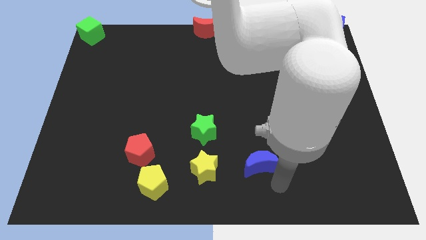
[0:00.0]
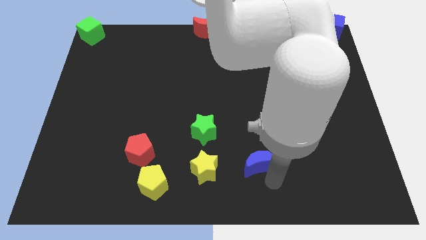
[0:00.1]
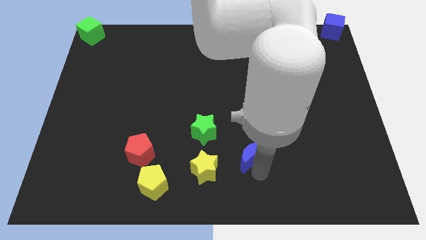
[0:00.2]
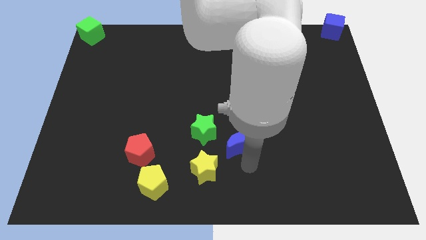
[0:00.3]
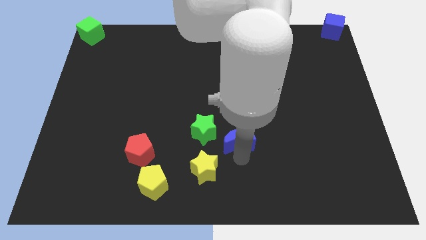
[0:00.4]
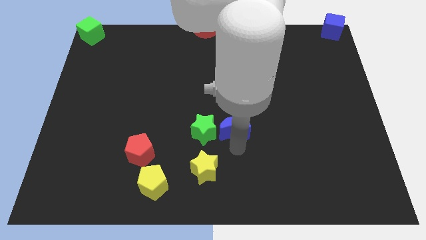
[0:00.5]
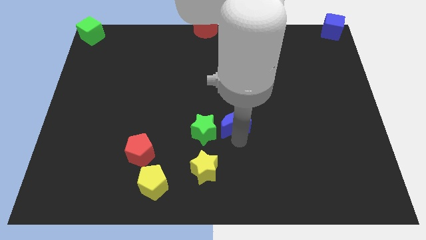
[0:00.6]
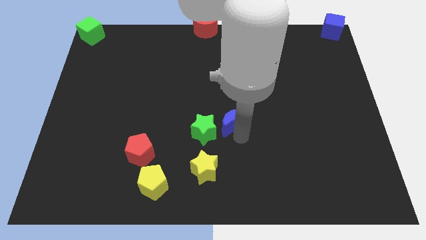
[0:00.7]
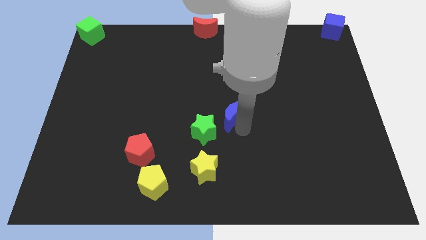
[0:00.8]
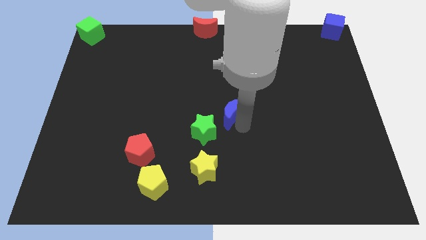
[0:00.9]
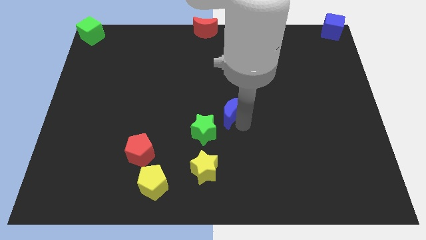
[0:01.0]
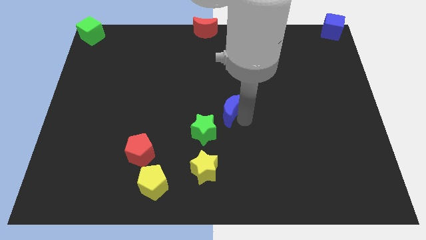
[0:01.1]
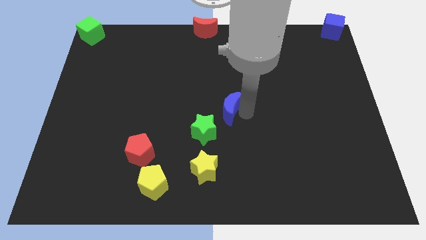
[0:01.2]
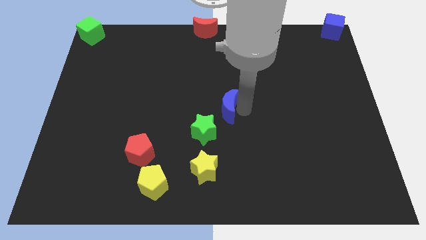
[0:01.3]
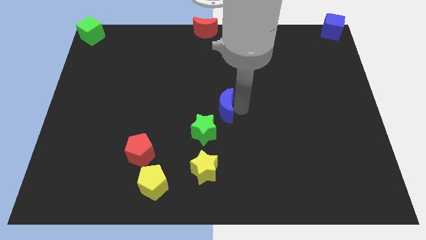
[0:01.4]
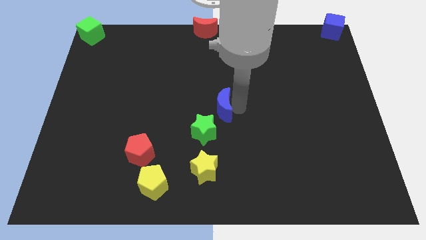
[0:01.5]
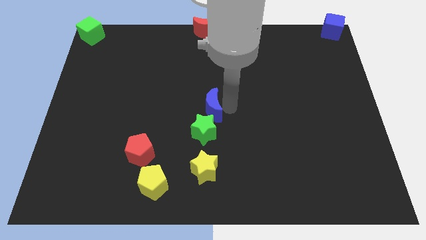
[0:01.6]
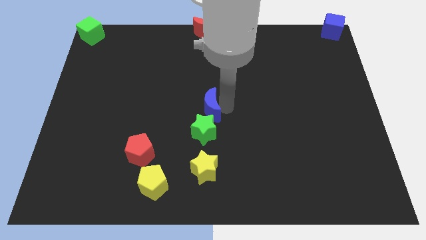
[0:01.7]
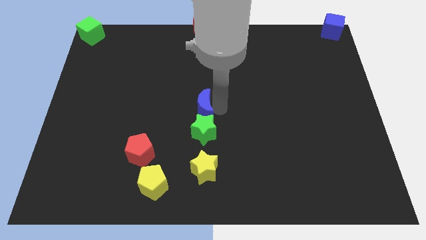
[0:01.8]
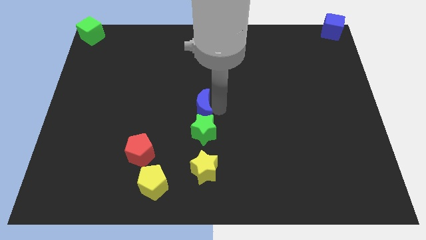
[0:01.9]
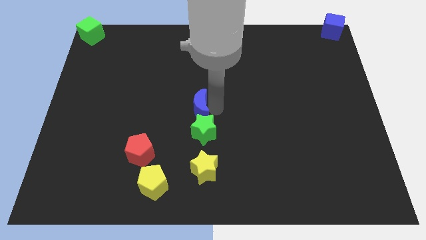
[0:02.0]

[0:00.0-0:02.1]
place the blue moon above the green star

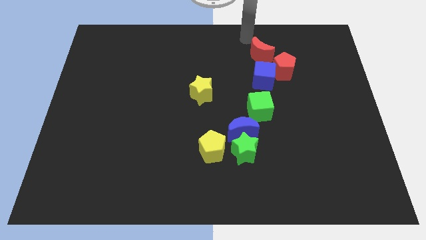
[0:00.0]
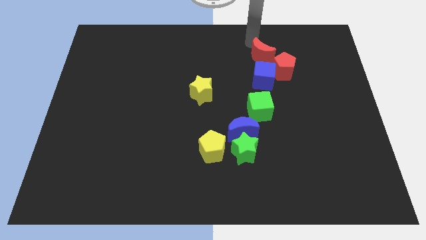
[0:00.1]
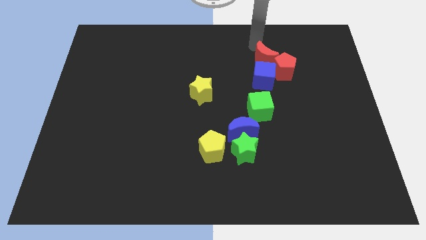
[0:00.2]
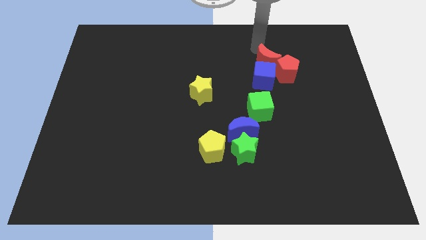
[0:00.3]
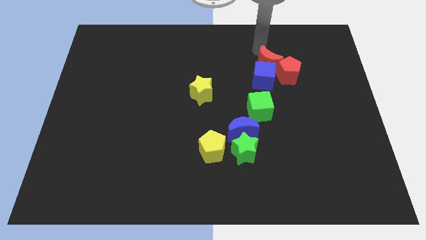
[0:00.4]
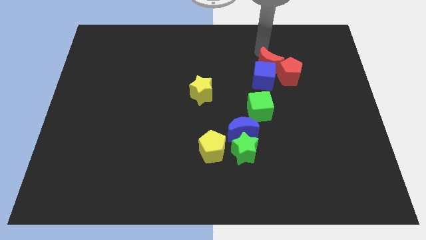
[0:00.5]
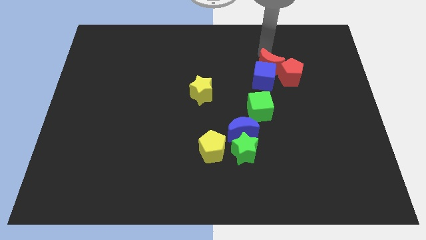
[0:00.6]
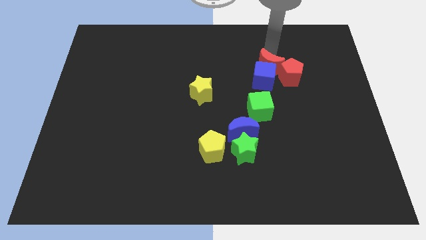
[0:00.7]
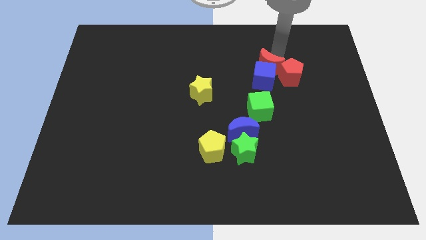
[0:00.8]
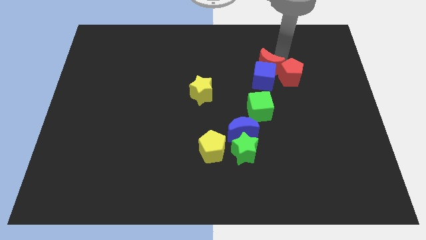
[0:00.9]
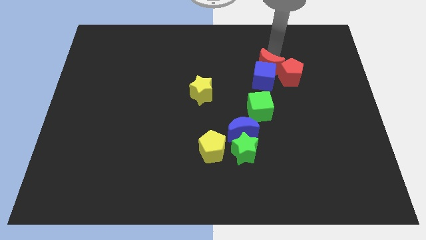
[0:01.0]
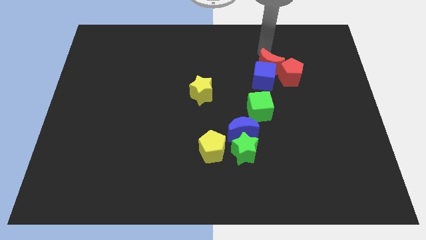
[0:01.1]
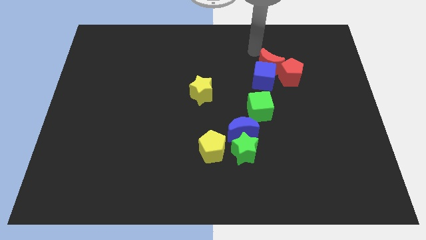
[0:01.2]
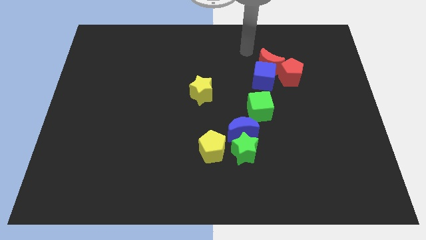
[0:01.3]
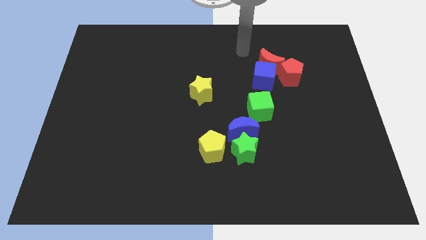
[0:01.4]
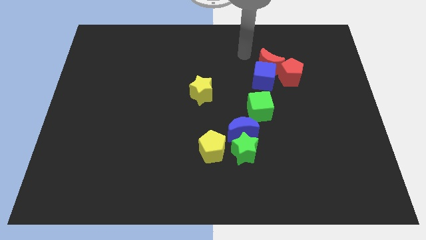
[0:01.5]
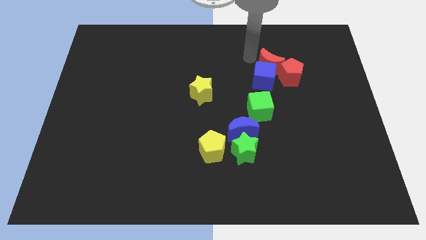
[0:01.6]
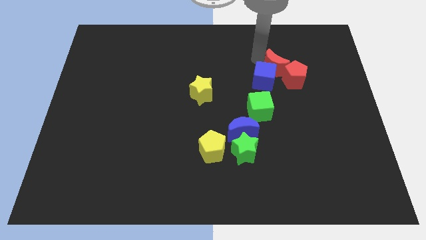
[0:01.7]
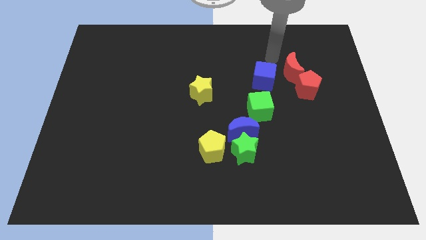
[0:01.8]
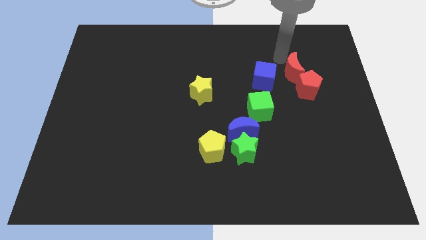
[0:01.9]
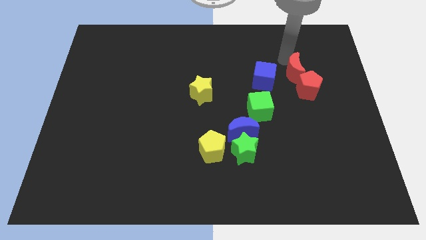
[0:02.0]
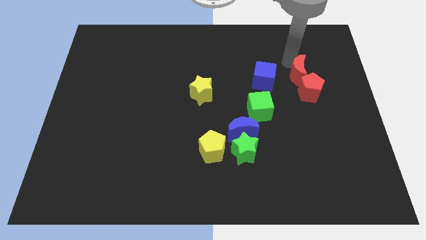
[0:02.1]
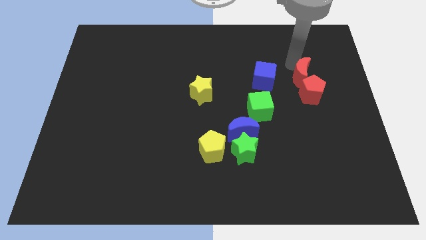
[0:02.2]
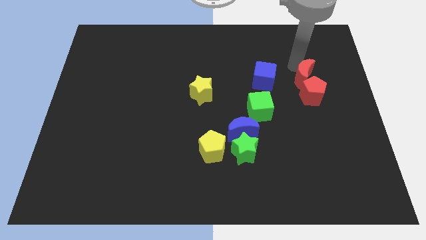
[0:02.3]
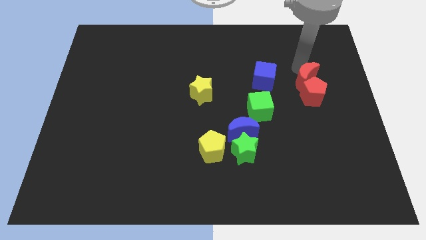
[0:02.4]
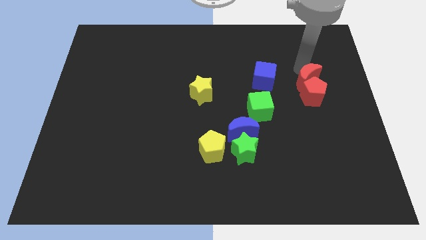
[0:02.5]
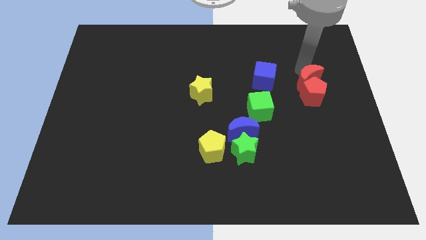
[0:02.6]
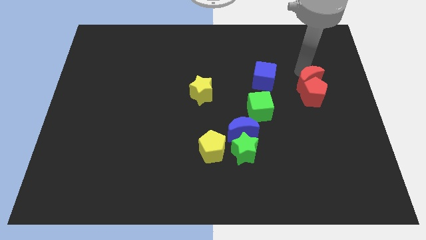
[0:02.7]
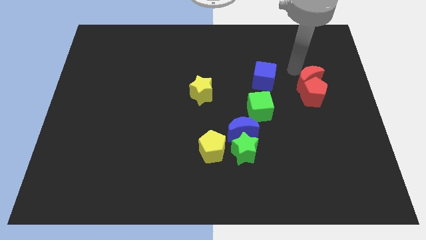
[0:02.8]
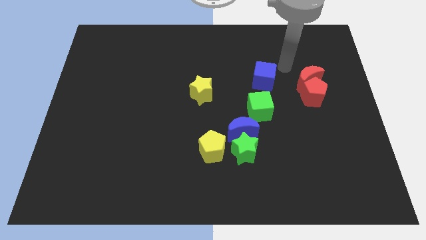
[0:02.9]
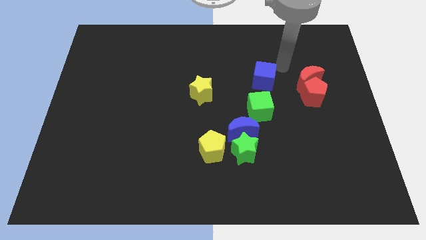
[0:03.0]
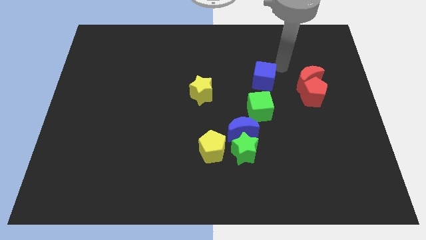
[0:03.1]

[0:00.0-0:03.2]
move the red crescent to the right center of the board

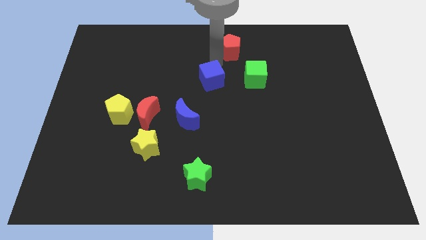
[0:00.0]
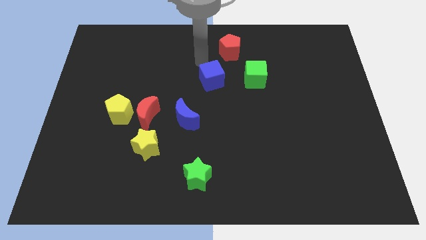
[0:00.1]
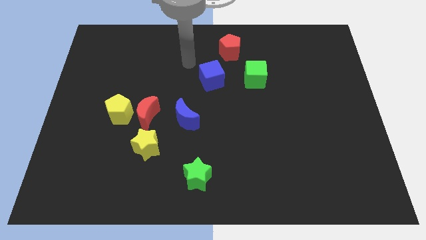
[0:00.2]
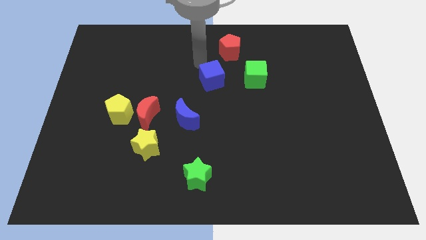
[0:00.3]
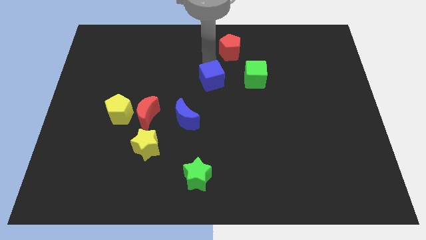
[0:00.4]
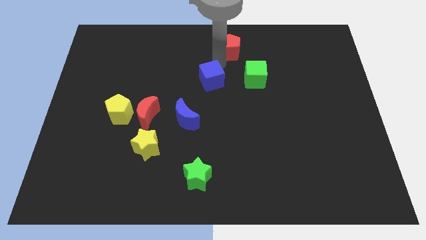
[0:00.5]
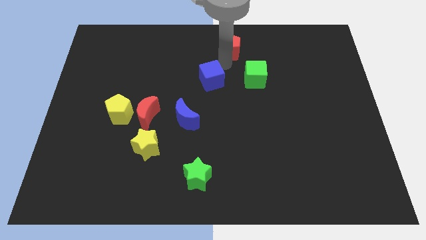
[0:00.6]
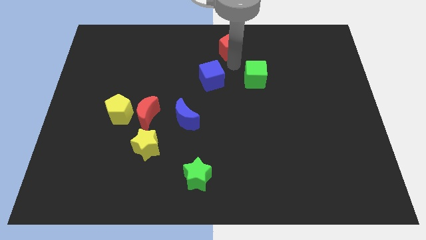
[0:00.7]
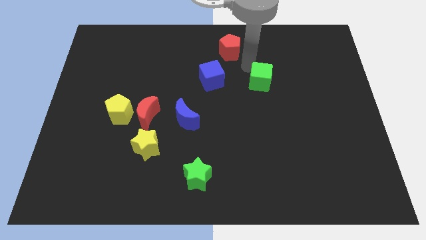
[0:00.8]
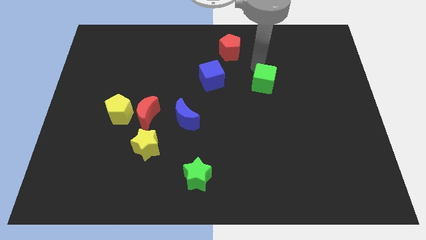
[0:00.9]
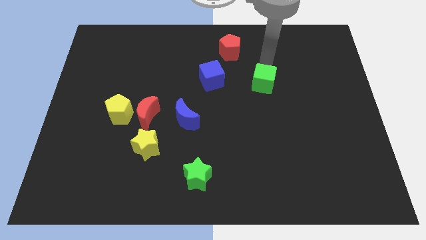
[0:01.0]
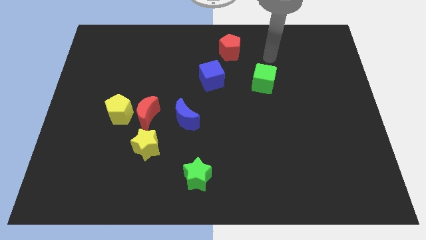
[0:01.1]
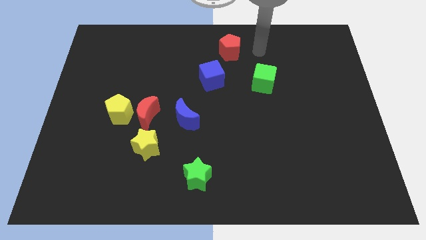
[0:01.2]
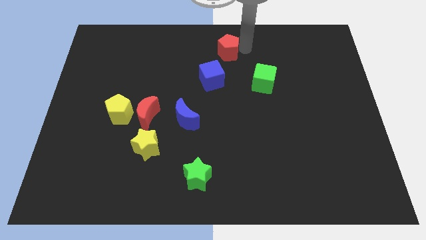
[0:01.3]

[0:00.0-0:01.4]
push the green cube slightly to the bottom

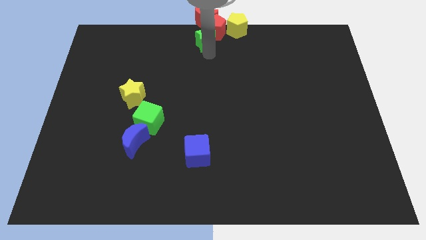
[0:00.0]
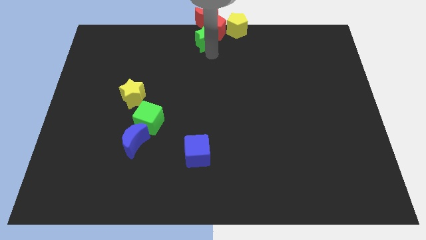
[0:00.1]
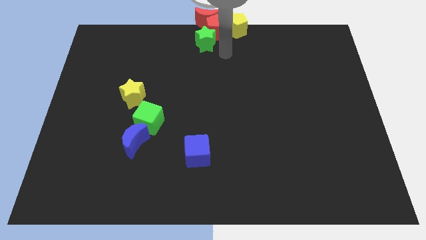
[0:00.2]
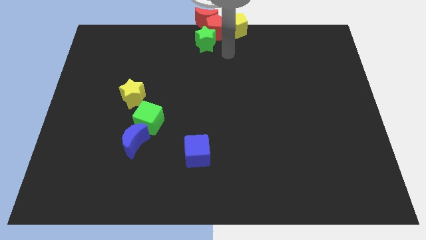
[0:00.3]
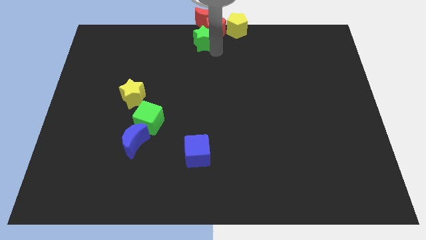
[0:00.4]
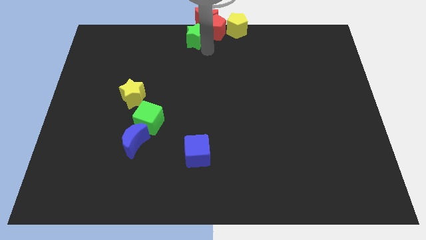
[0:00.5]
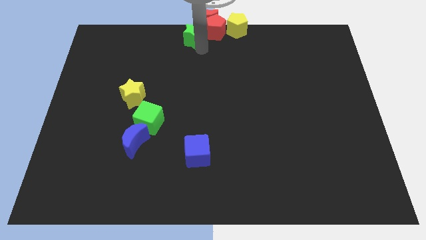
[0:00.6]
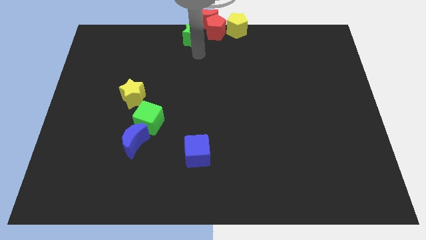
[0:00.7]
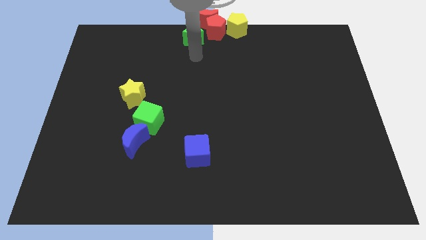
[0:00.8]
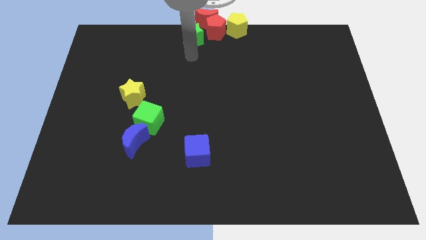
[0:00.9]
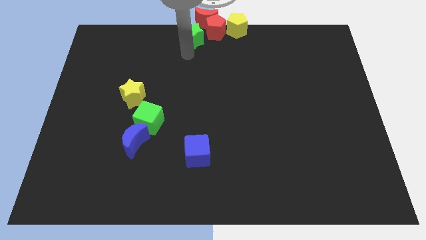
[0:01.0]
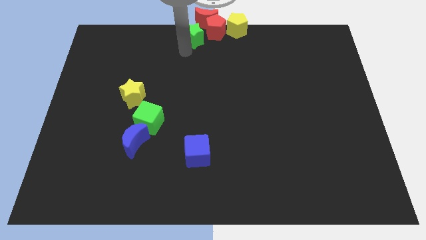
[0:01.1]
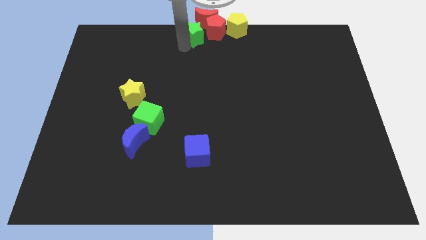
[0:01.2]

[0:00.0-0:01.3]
move green star left beside red pentagon

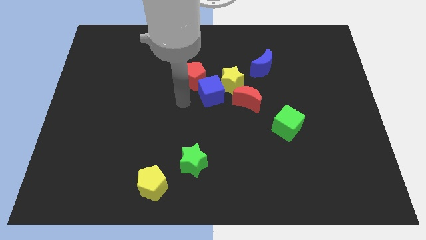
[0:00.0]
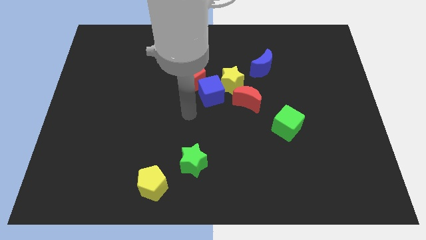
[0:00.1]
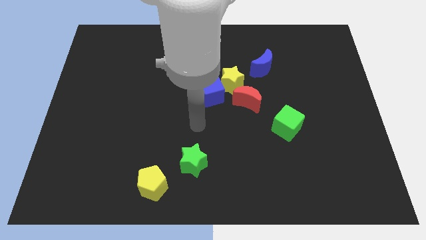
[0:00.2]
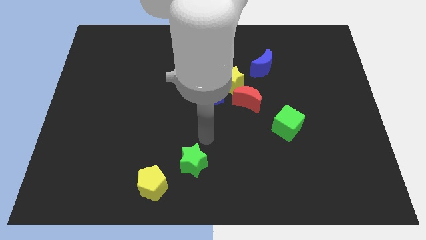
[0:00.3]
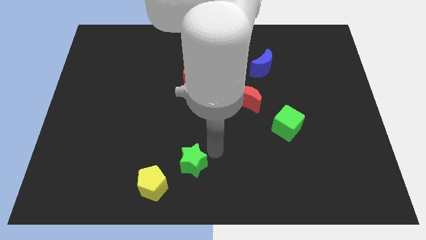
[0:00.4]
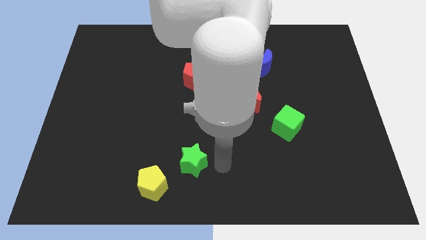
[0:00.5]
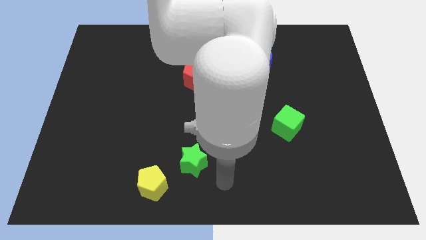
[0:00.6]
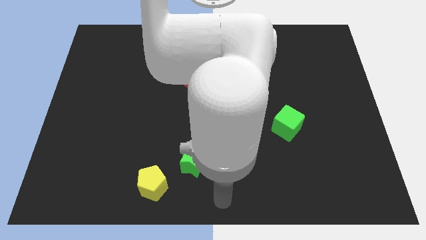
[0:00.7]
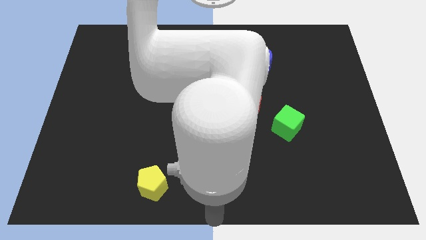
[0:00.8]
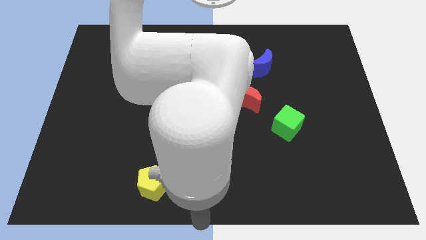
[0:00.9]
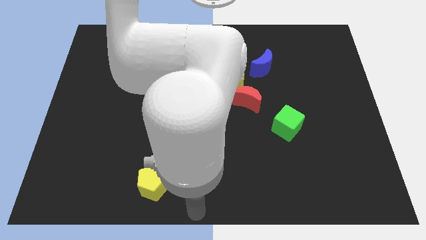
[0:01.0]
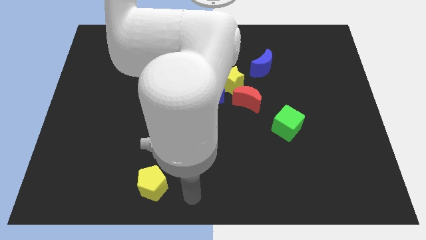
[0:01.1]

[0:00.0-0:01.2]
move your arm to the bottom of the green star
